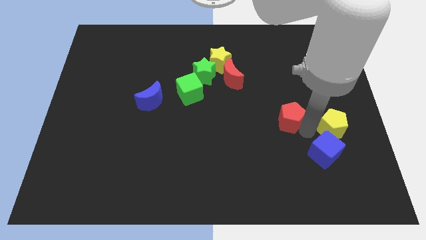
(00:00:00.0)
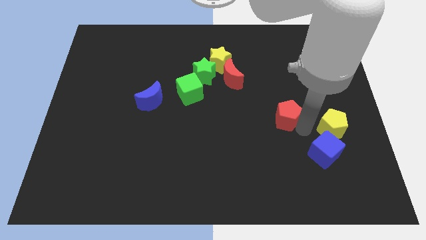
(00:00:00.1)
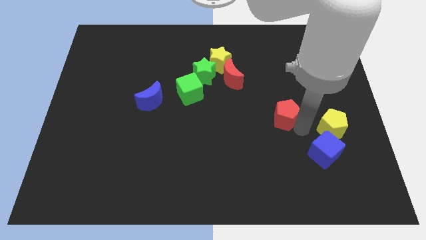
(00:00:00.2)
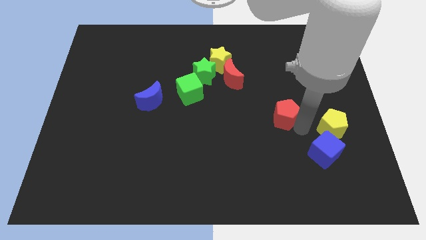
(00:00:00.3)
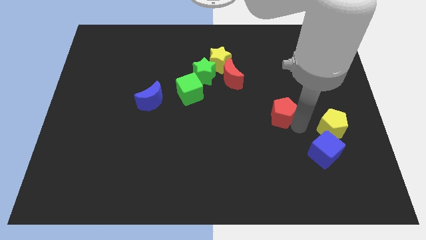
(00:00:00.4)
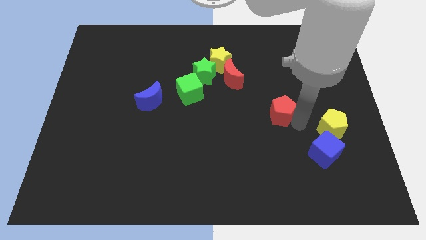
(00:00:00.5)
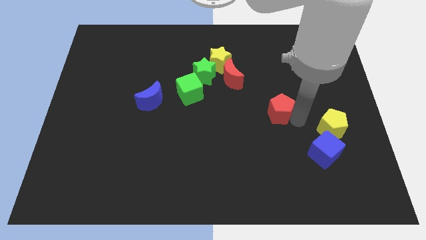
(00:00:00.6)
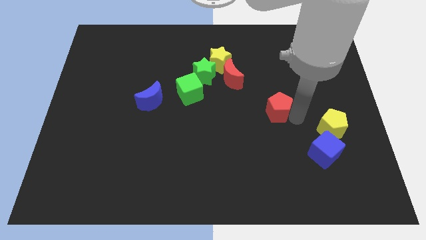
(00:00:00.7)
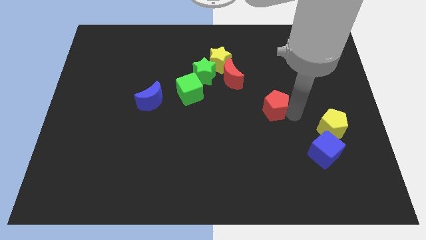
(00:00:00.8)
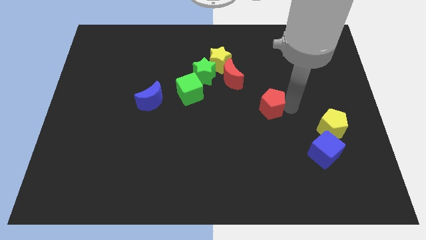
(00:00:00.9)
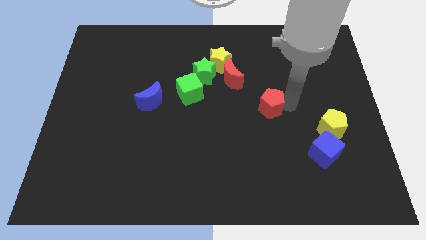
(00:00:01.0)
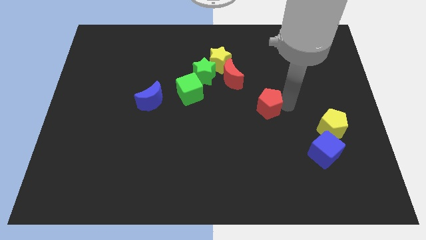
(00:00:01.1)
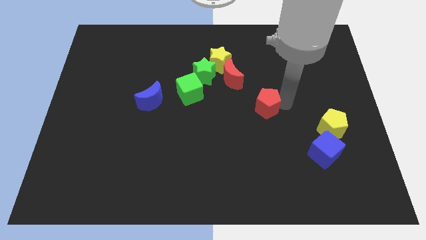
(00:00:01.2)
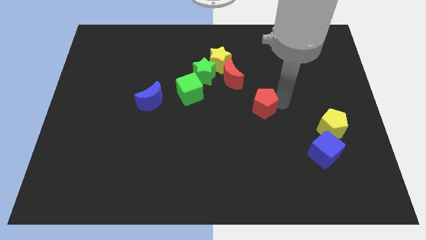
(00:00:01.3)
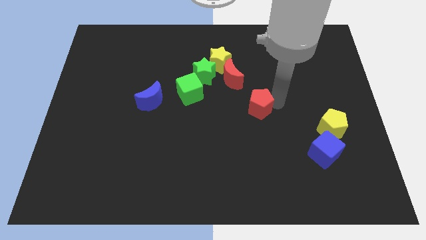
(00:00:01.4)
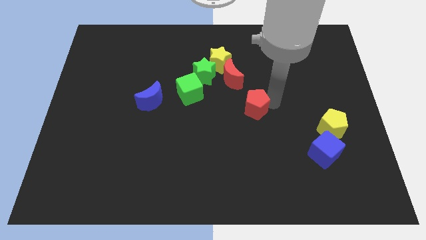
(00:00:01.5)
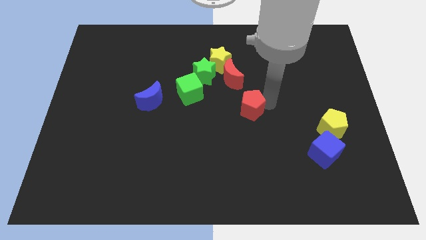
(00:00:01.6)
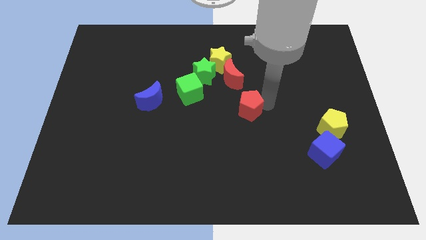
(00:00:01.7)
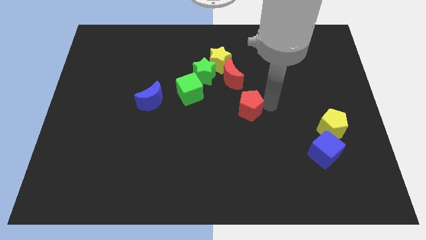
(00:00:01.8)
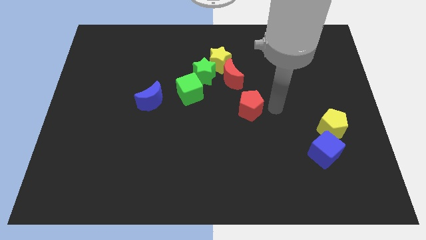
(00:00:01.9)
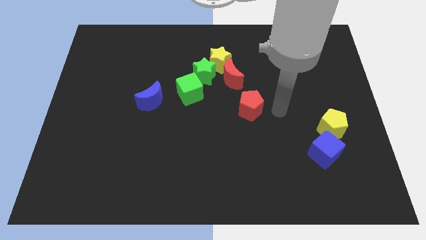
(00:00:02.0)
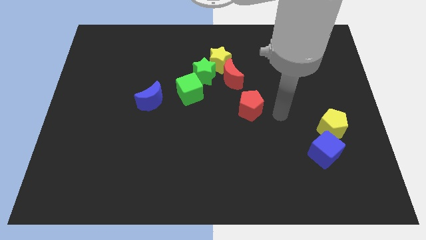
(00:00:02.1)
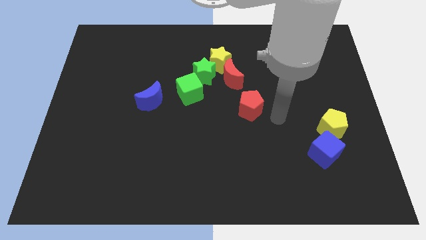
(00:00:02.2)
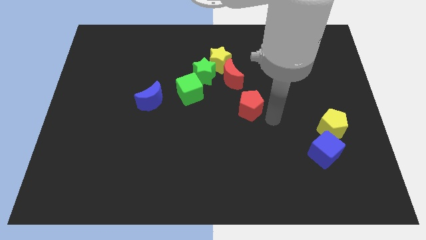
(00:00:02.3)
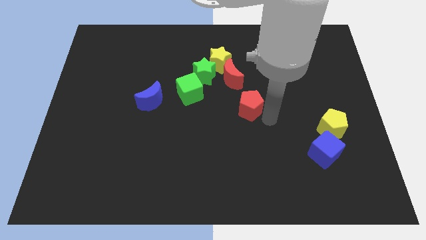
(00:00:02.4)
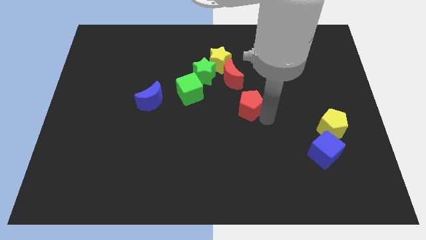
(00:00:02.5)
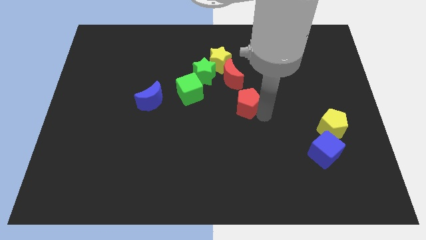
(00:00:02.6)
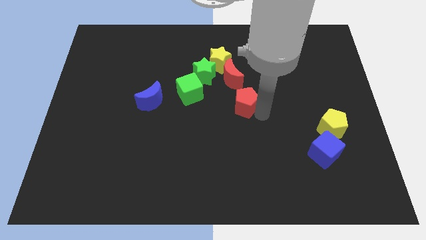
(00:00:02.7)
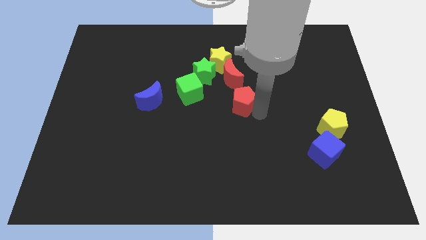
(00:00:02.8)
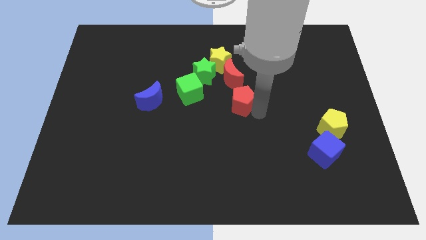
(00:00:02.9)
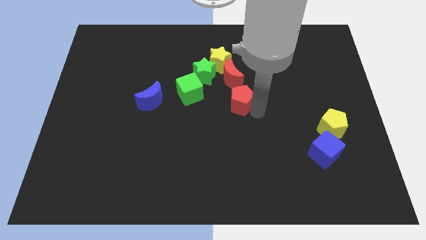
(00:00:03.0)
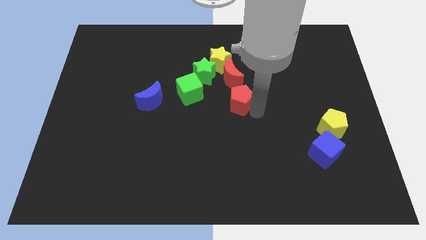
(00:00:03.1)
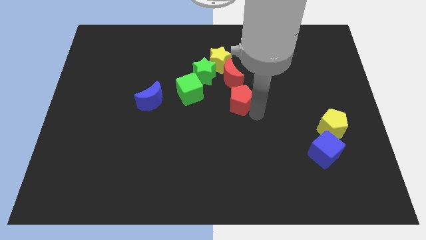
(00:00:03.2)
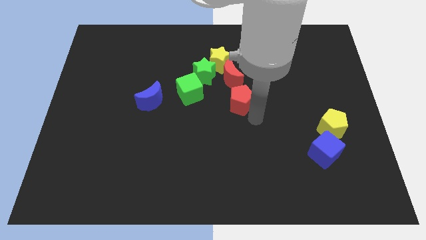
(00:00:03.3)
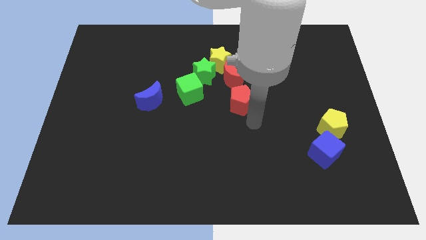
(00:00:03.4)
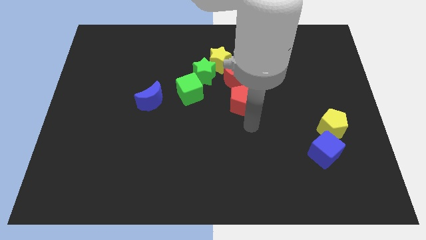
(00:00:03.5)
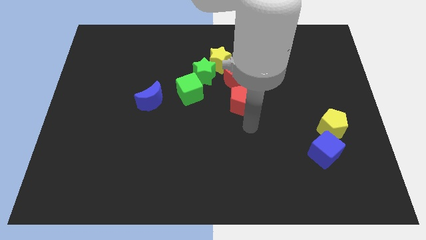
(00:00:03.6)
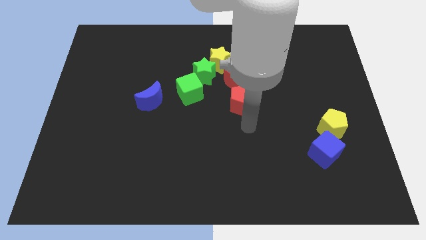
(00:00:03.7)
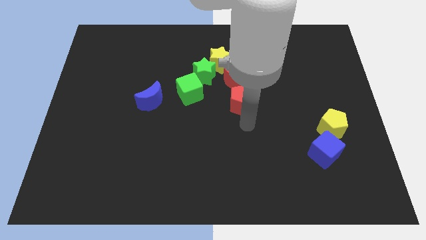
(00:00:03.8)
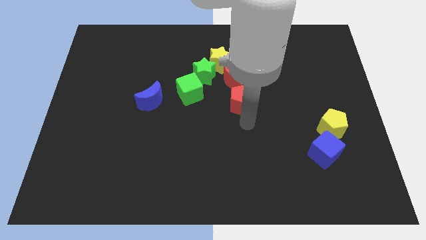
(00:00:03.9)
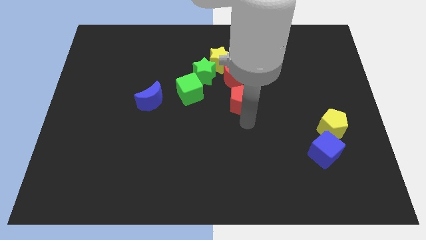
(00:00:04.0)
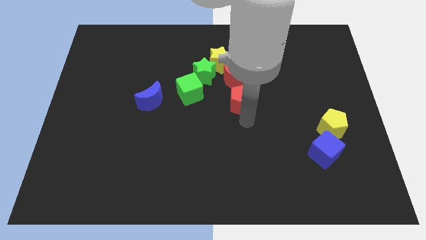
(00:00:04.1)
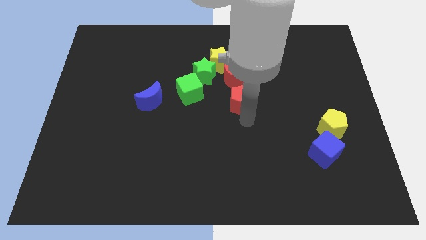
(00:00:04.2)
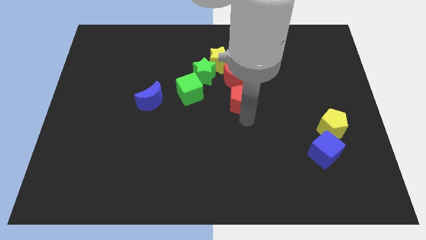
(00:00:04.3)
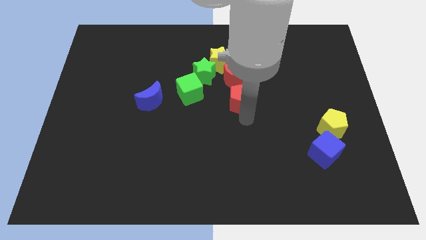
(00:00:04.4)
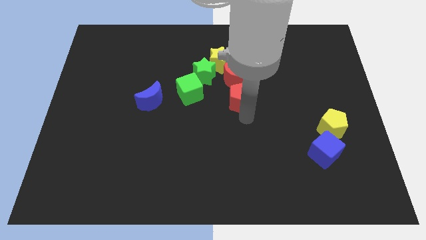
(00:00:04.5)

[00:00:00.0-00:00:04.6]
push the red pentagon to the bottom of the red crescent

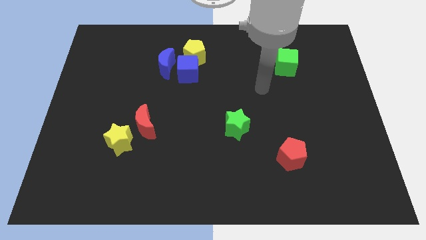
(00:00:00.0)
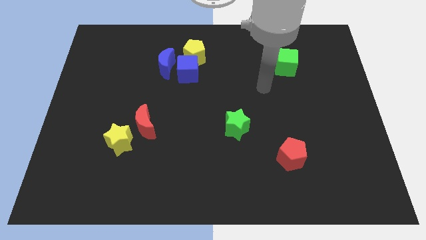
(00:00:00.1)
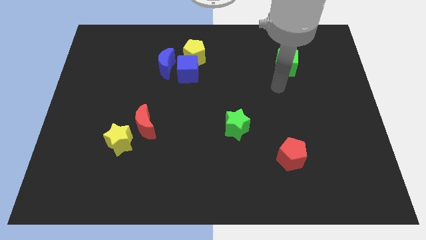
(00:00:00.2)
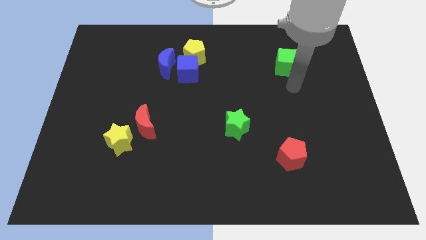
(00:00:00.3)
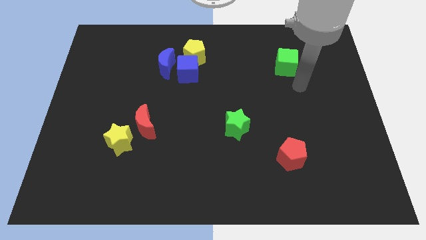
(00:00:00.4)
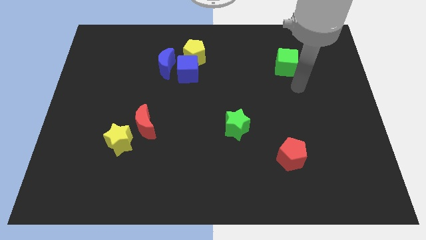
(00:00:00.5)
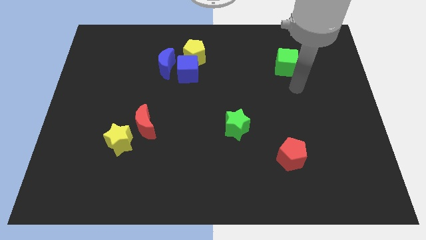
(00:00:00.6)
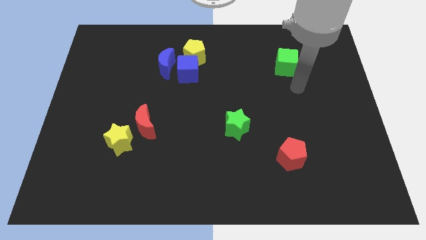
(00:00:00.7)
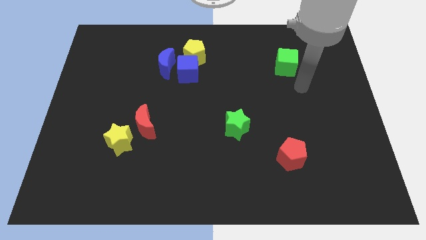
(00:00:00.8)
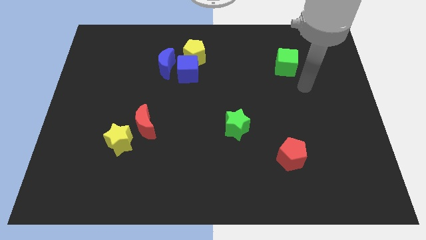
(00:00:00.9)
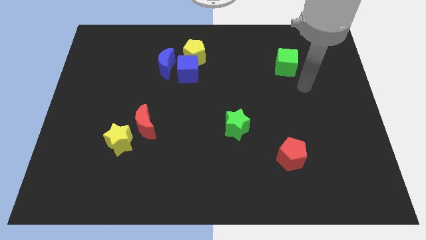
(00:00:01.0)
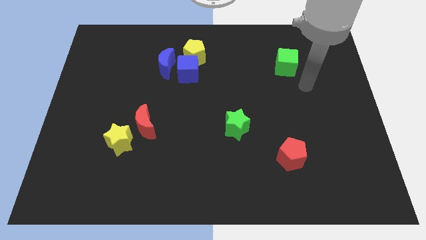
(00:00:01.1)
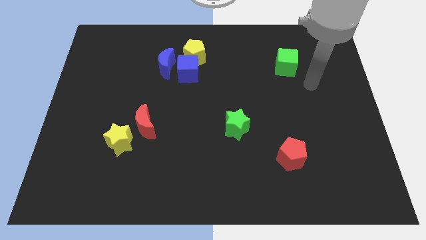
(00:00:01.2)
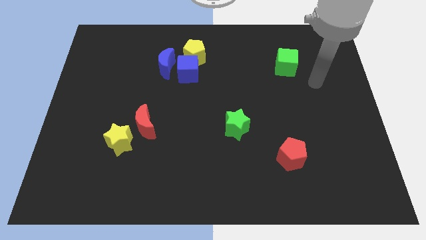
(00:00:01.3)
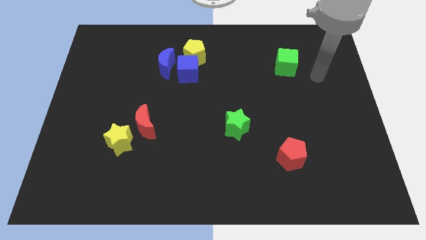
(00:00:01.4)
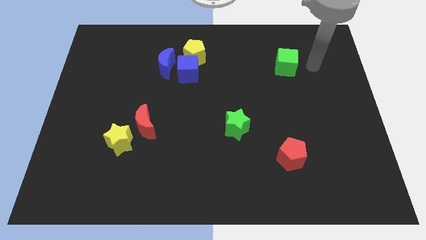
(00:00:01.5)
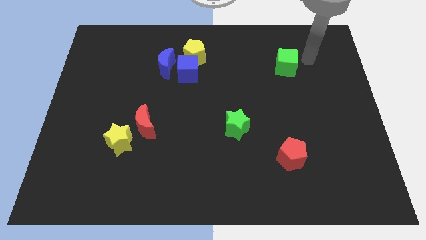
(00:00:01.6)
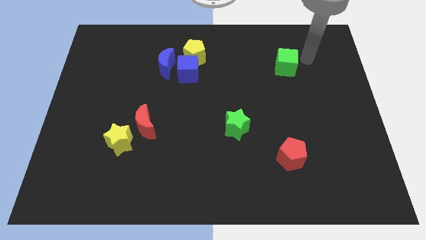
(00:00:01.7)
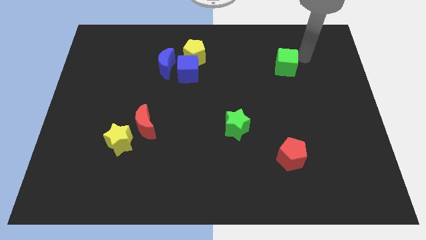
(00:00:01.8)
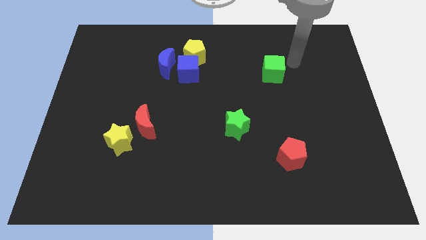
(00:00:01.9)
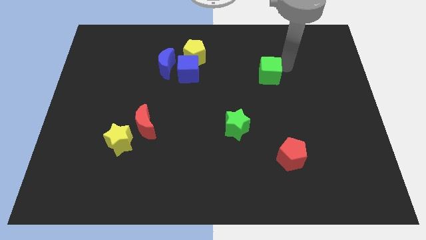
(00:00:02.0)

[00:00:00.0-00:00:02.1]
slide green cube slightly to left

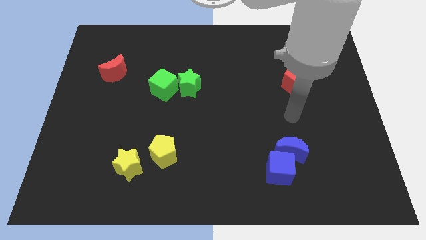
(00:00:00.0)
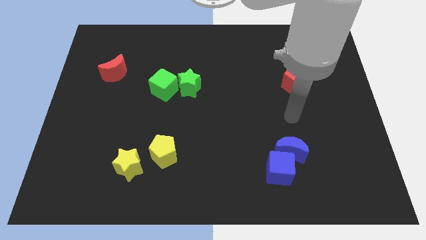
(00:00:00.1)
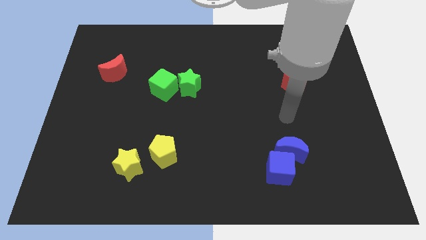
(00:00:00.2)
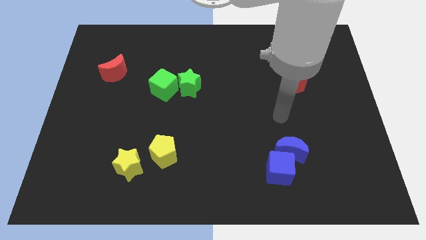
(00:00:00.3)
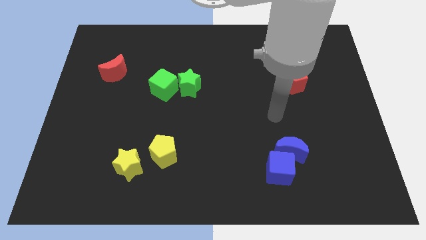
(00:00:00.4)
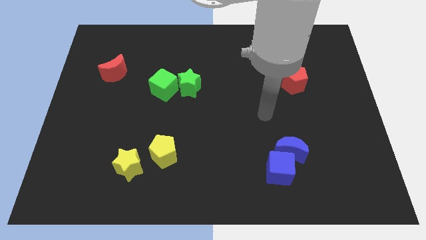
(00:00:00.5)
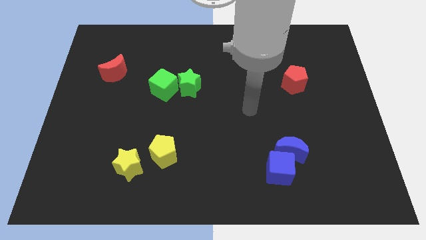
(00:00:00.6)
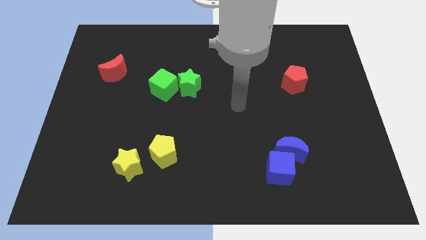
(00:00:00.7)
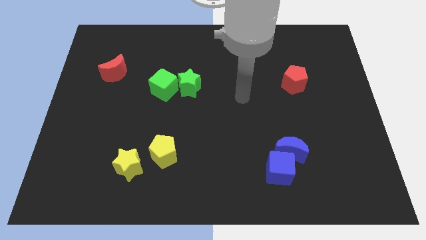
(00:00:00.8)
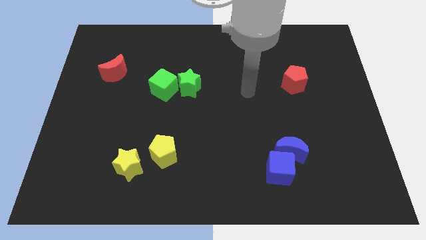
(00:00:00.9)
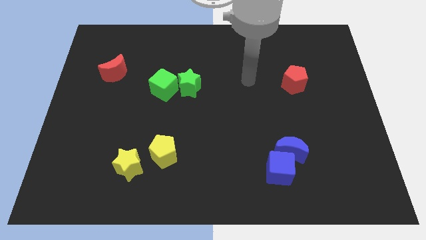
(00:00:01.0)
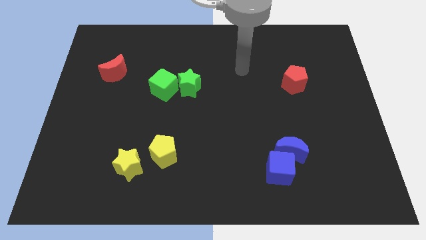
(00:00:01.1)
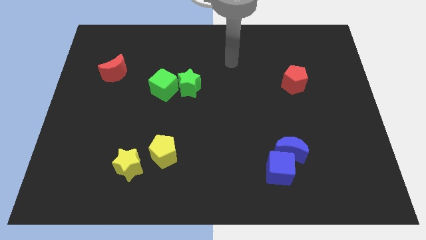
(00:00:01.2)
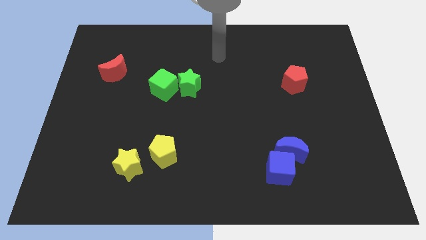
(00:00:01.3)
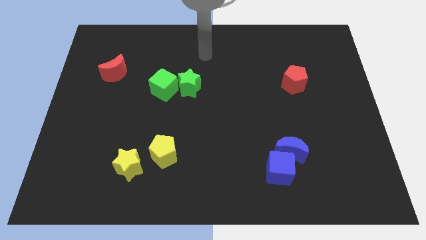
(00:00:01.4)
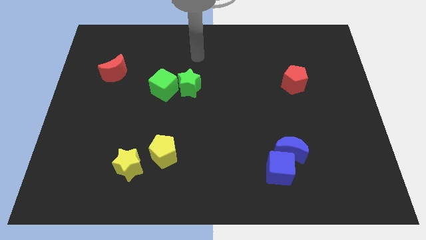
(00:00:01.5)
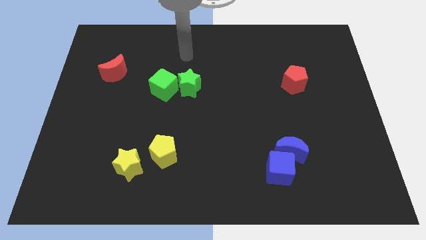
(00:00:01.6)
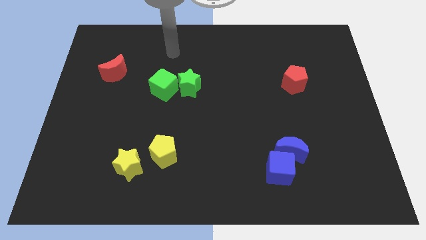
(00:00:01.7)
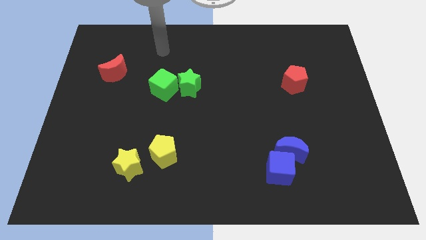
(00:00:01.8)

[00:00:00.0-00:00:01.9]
place your arm on the top of green cube

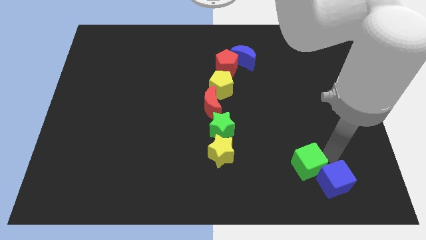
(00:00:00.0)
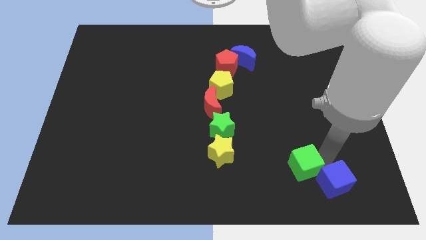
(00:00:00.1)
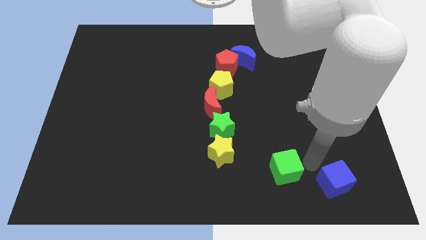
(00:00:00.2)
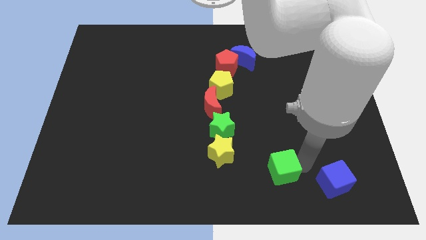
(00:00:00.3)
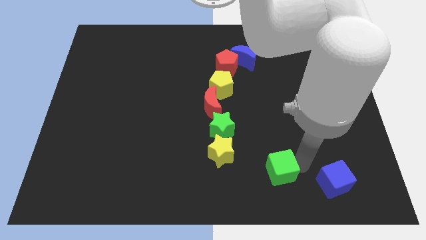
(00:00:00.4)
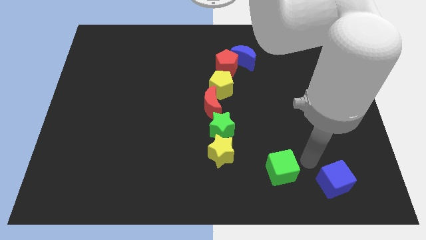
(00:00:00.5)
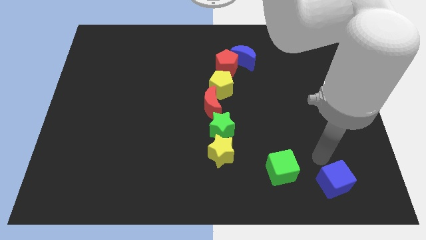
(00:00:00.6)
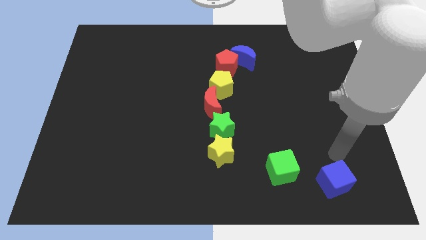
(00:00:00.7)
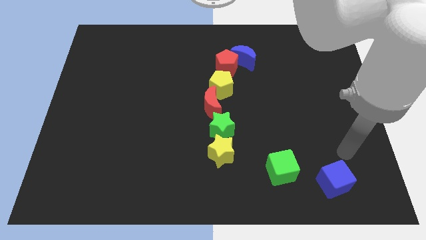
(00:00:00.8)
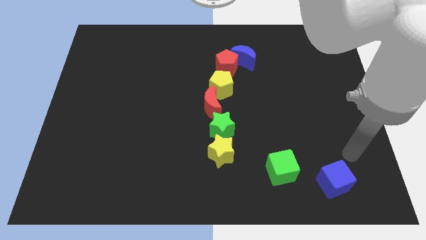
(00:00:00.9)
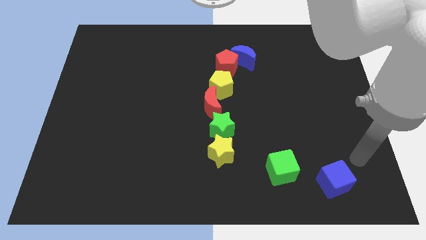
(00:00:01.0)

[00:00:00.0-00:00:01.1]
separate green cube from blue cube
